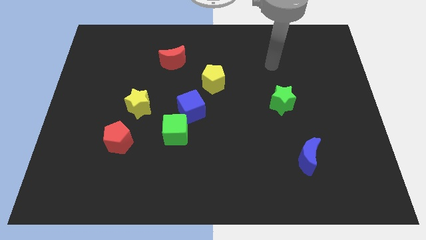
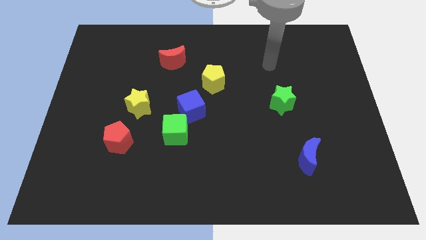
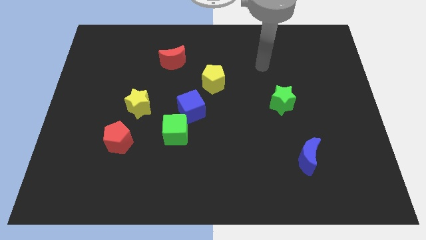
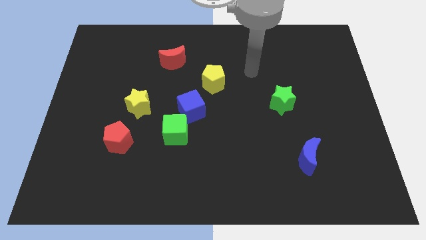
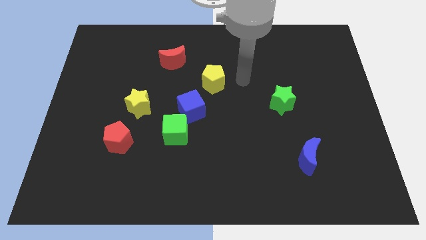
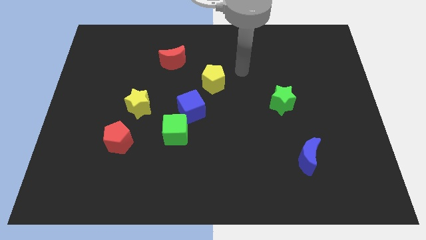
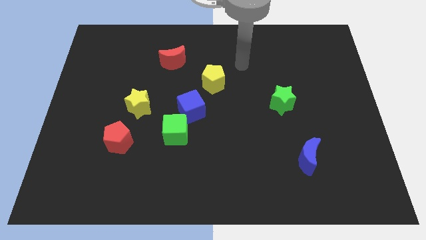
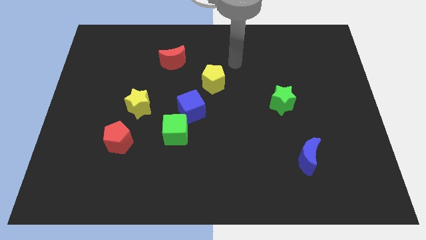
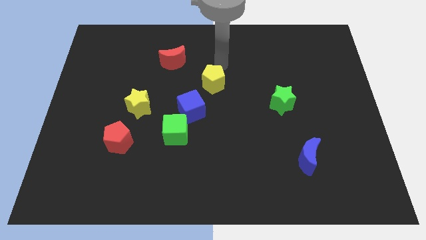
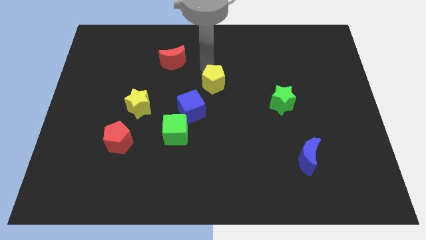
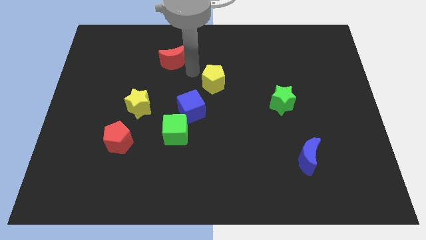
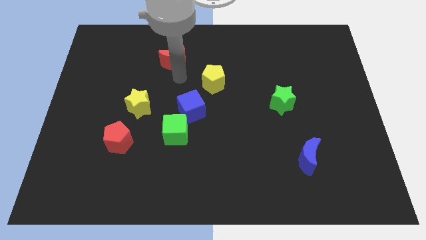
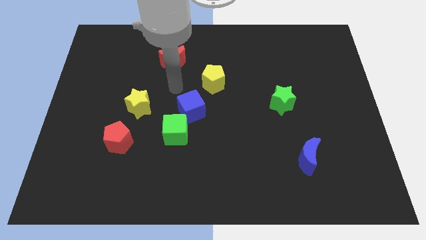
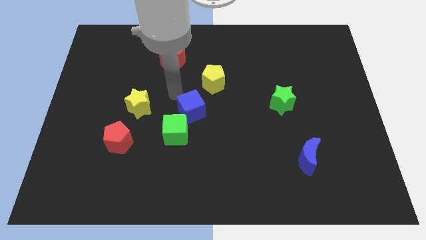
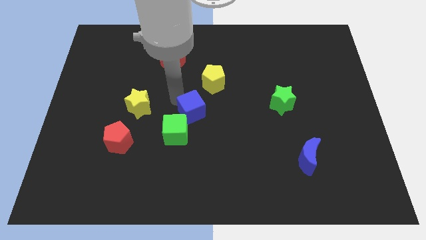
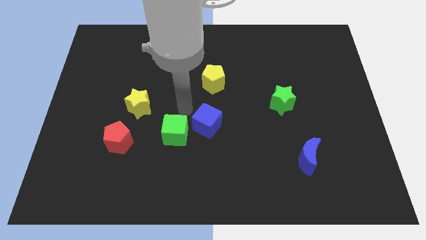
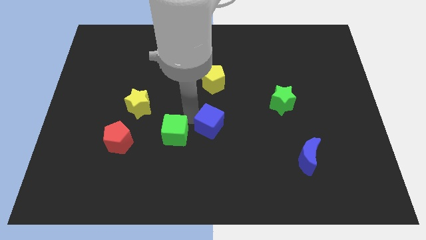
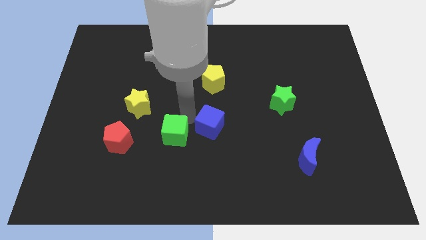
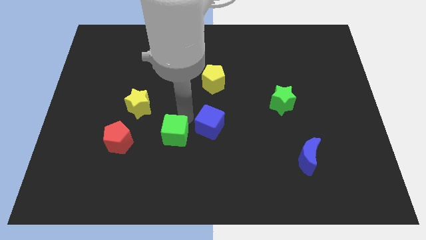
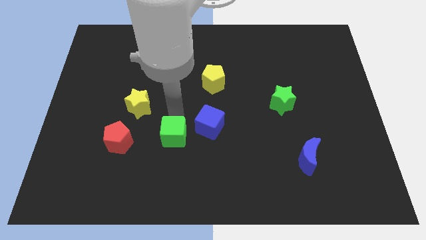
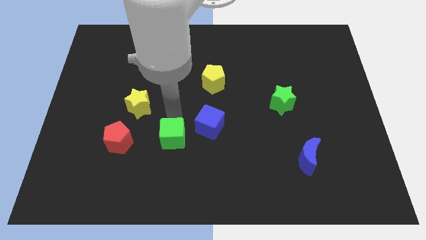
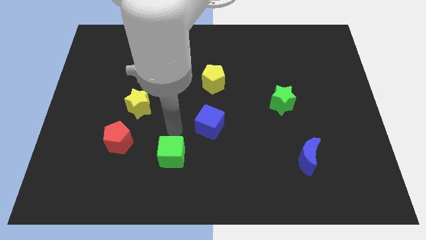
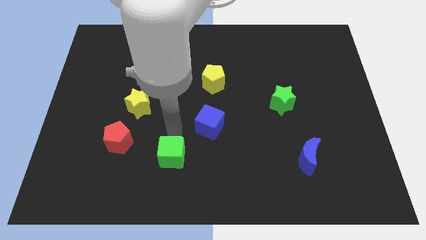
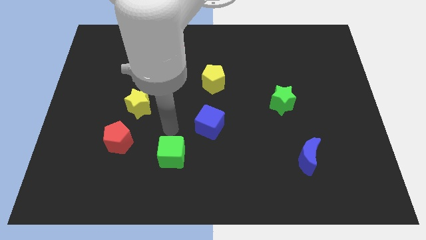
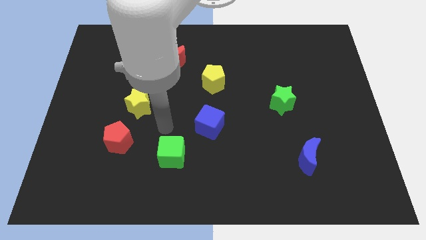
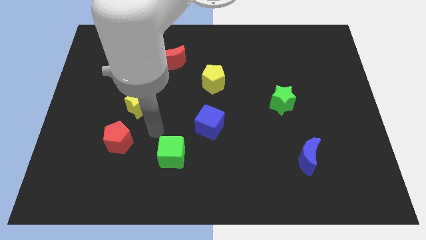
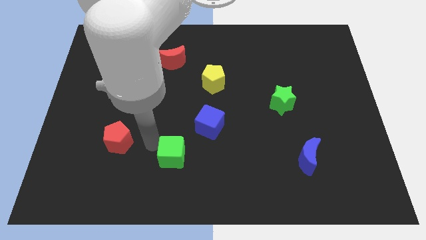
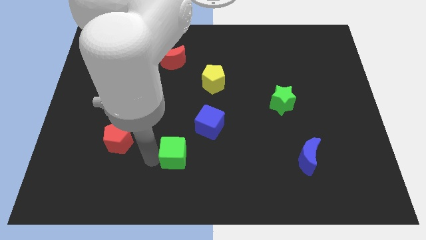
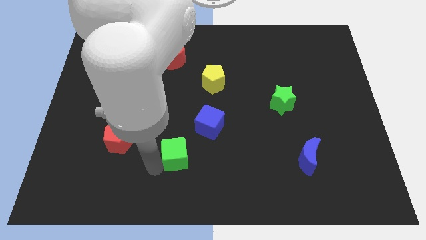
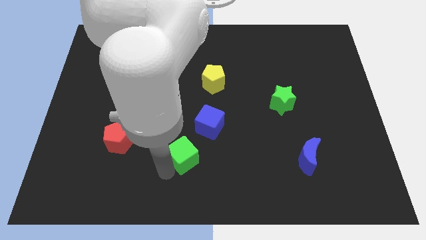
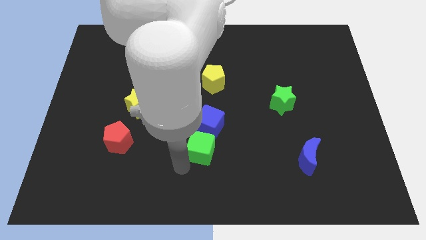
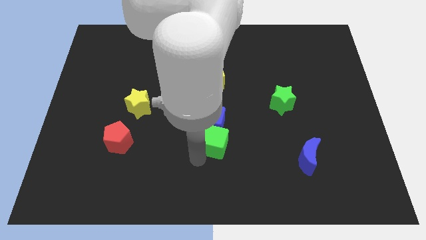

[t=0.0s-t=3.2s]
place green cube below blue cube

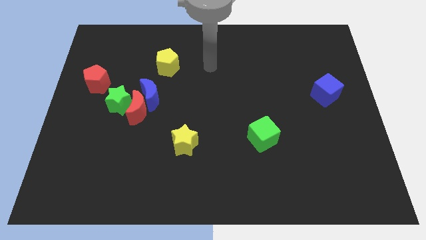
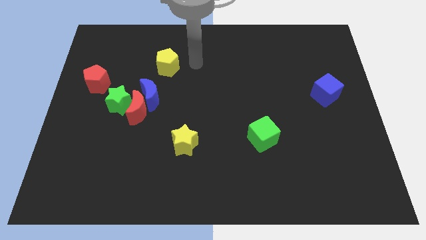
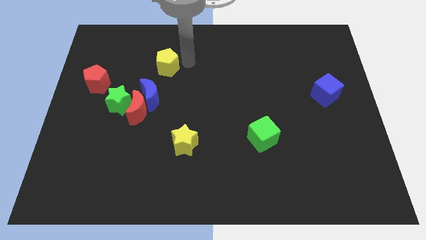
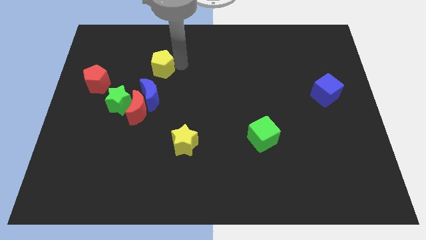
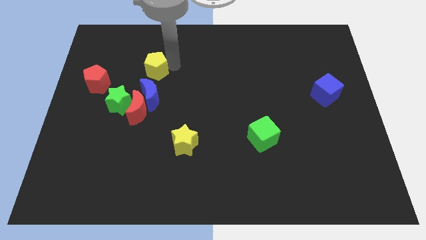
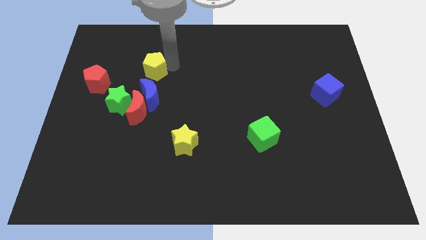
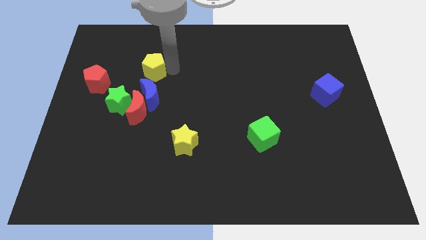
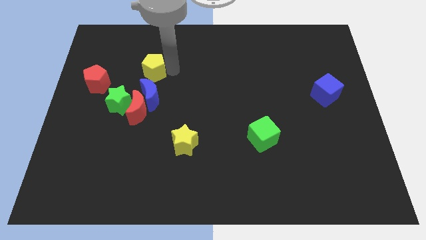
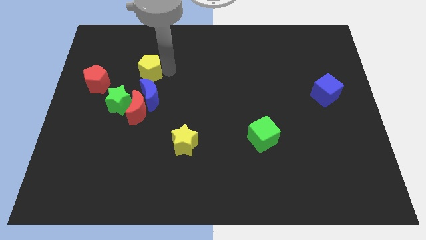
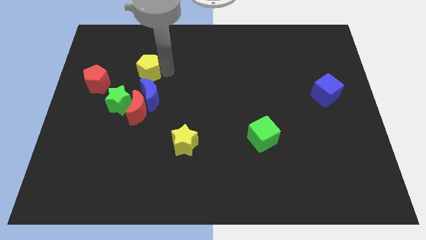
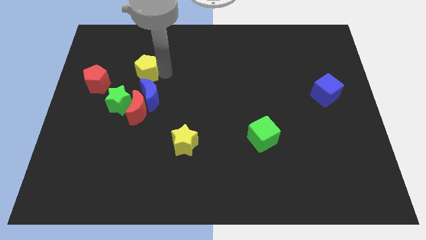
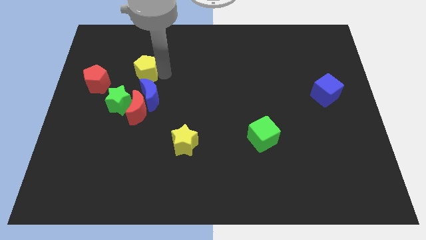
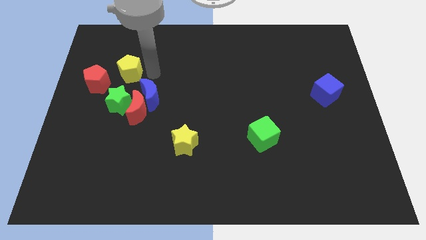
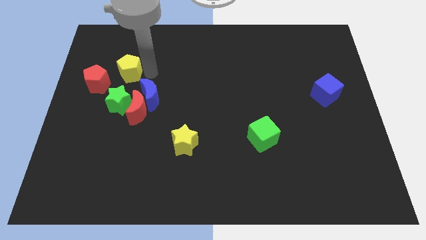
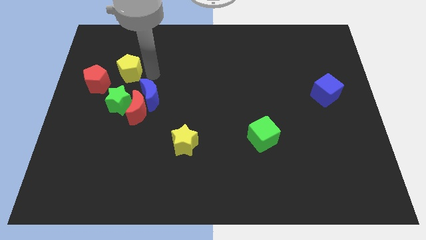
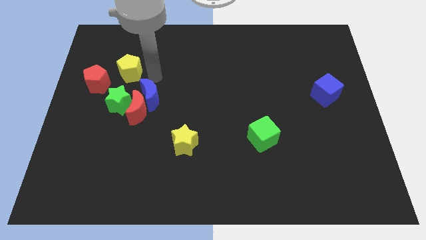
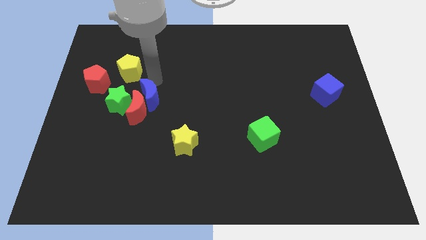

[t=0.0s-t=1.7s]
push the yellow pentagon slightly towards red pentgaon

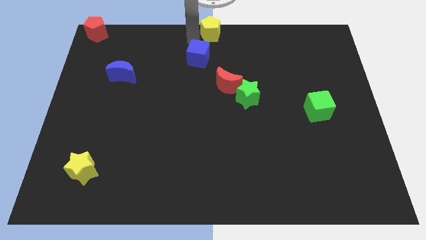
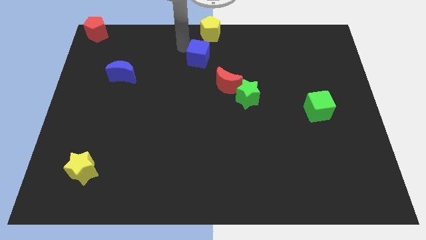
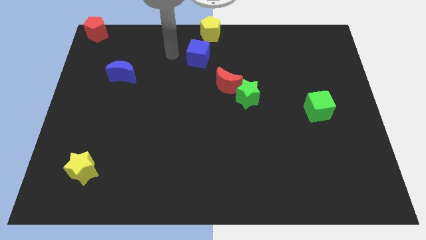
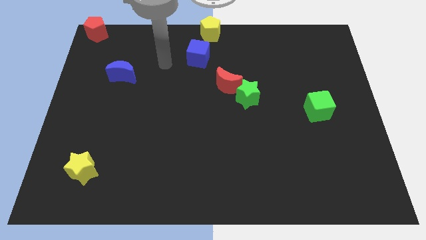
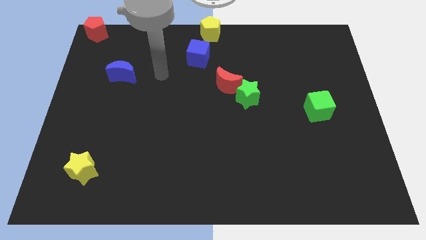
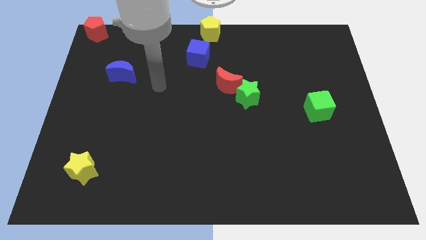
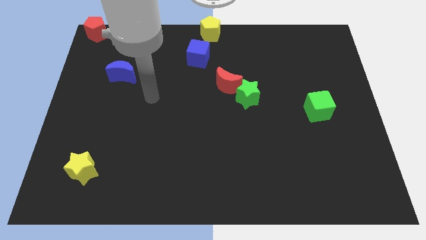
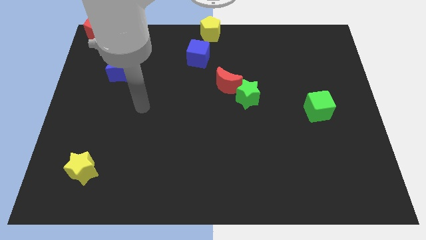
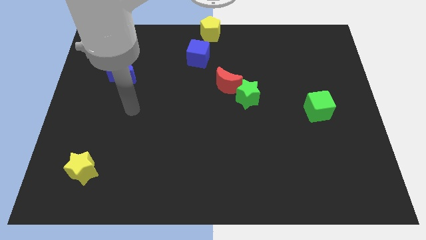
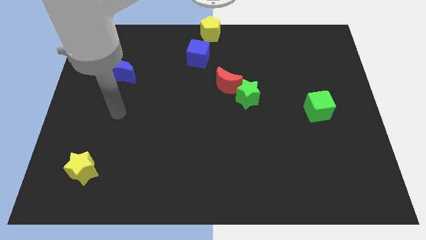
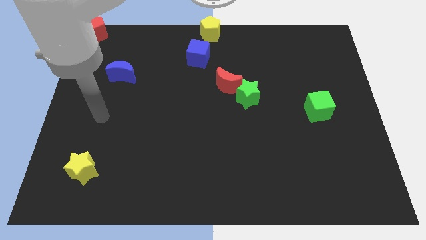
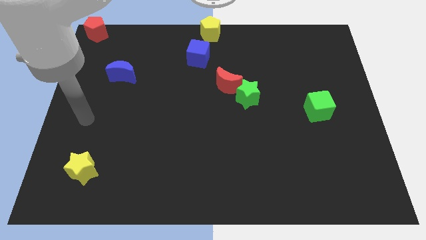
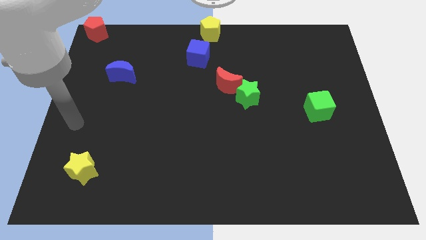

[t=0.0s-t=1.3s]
move the arm away from the yellow pentagon

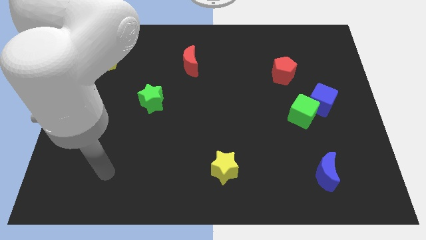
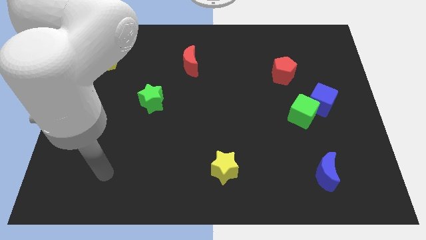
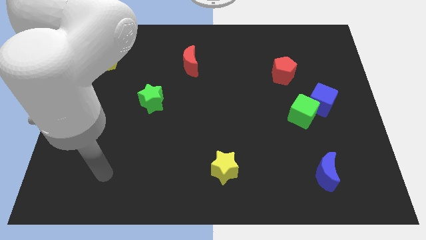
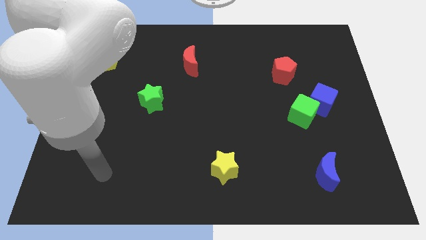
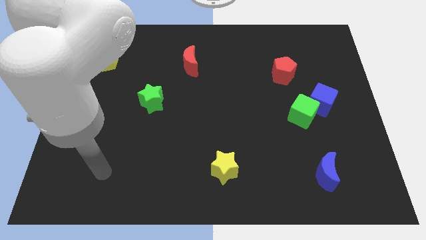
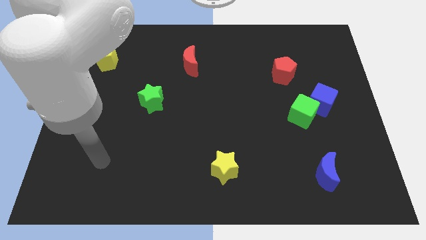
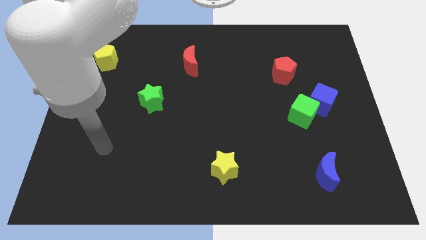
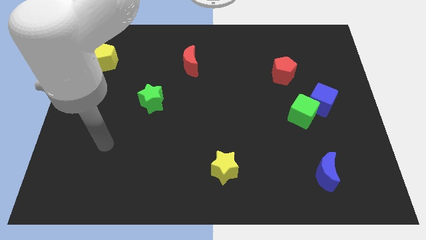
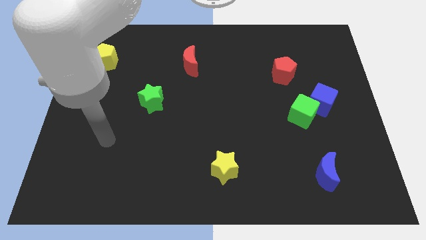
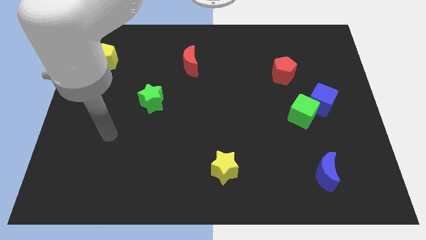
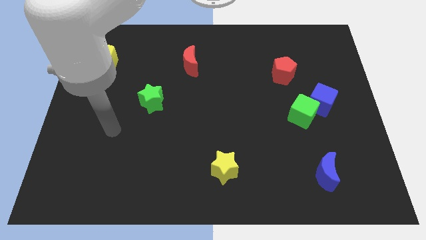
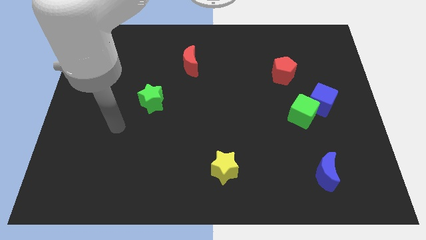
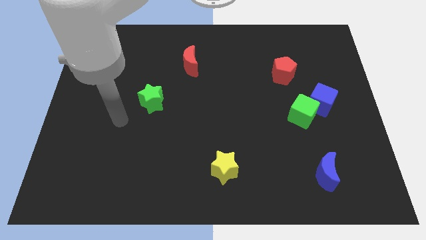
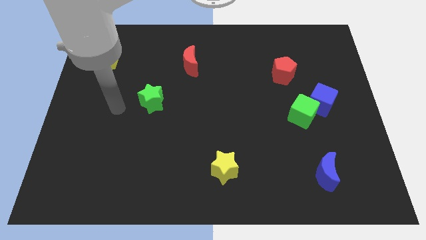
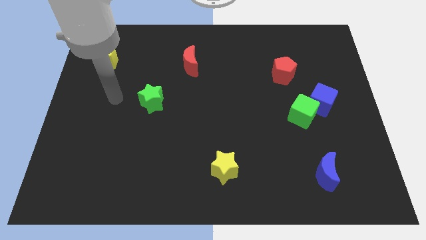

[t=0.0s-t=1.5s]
point at the left side of the green star

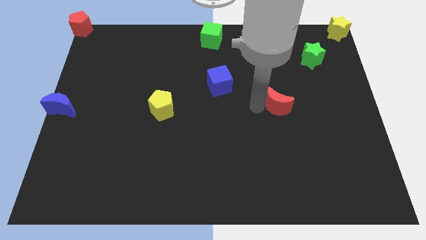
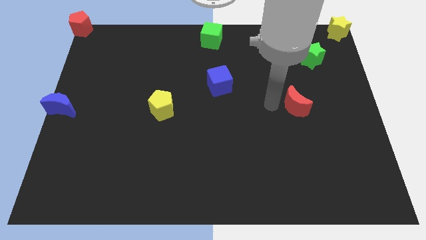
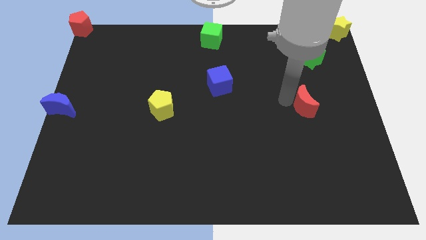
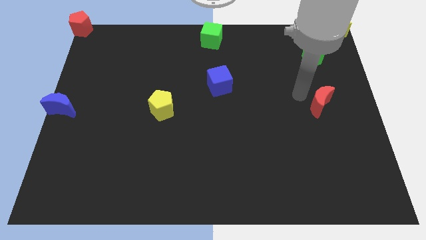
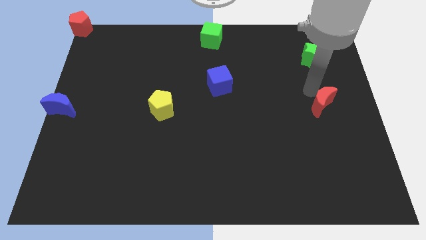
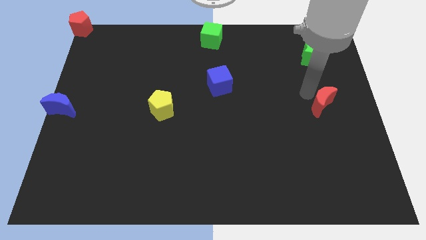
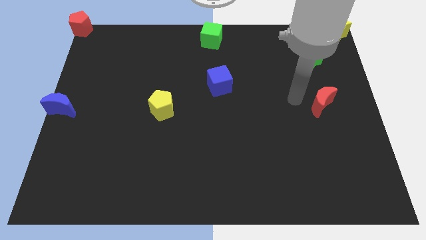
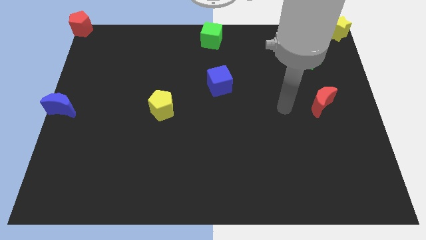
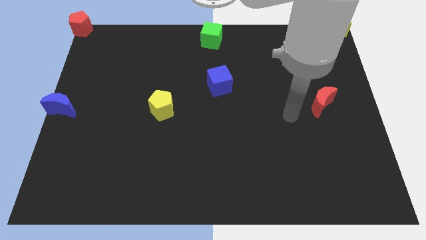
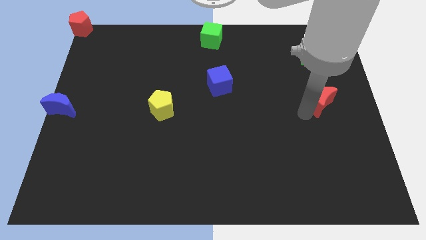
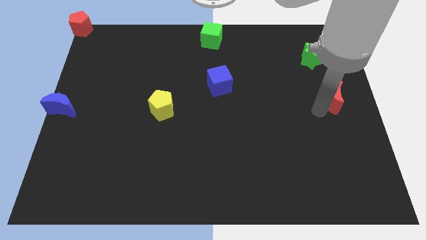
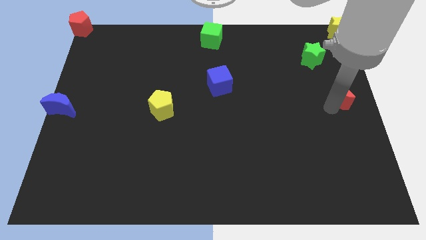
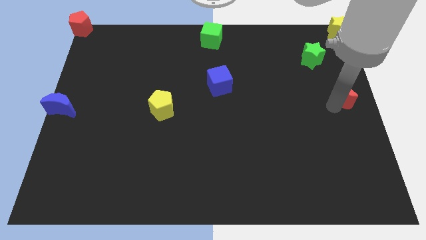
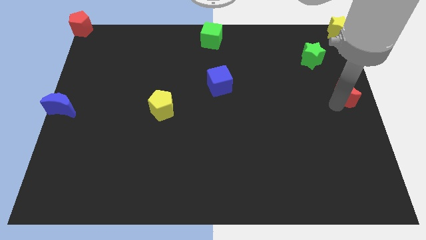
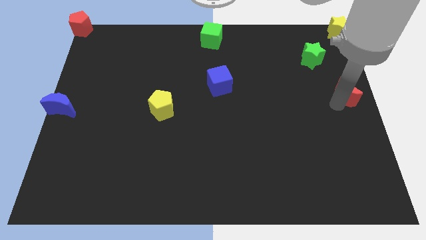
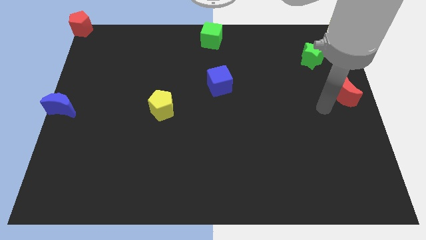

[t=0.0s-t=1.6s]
push the red moon to the right
